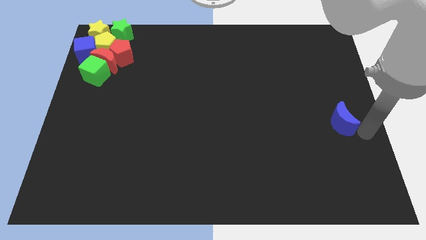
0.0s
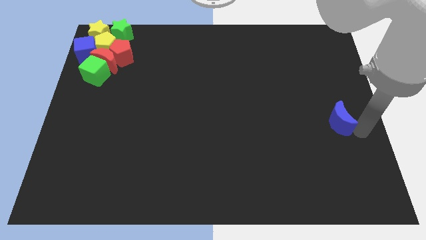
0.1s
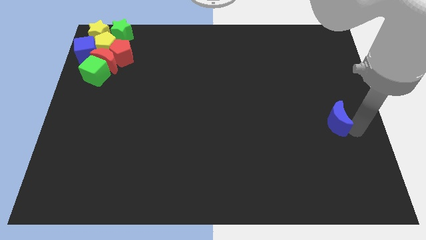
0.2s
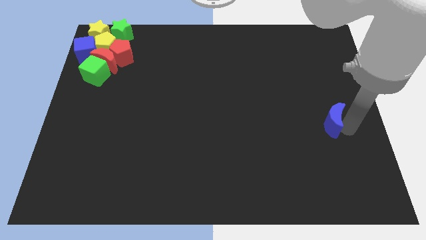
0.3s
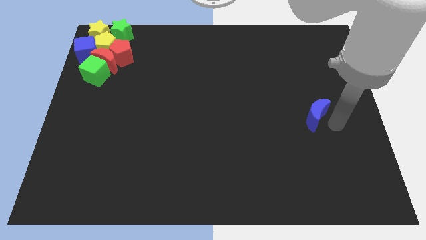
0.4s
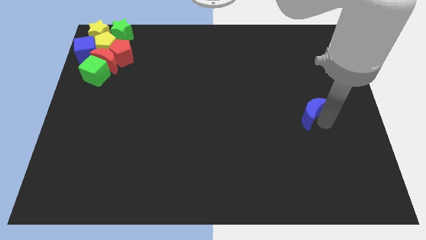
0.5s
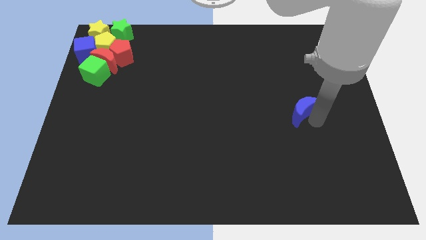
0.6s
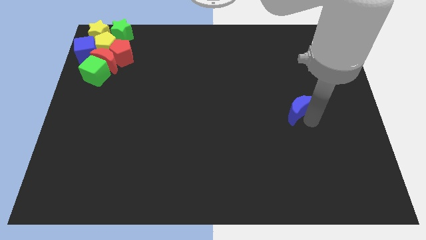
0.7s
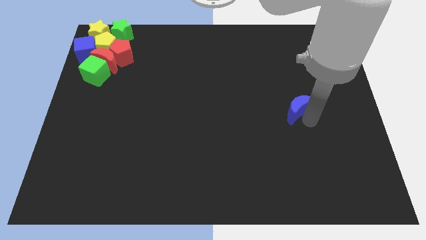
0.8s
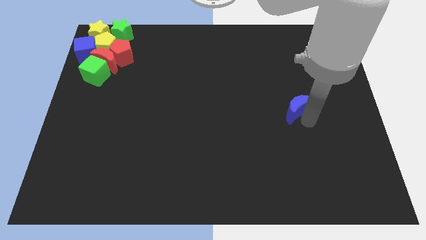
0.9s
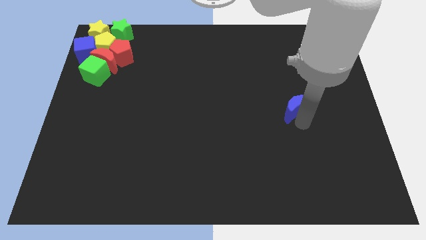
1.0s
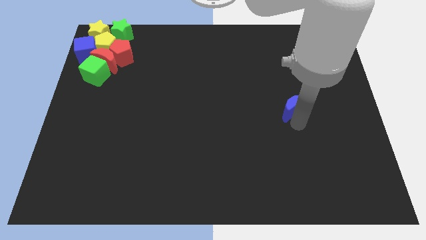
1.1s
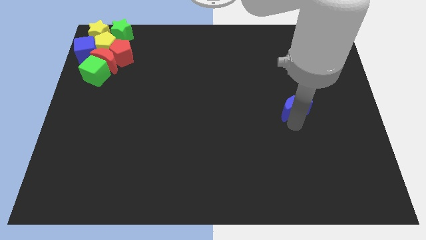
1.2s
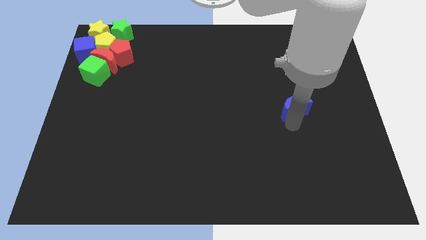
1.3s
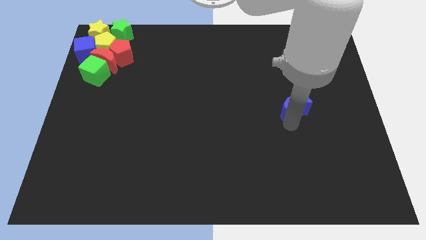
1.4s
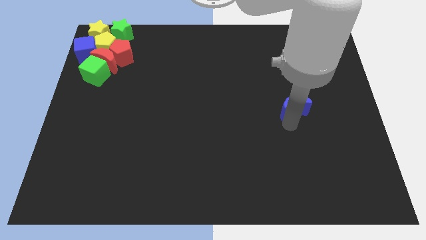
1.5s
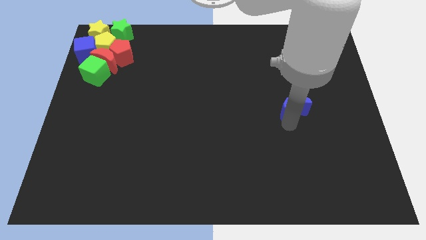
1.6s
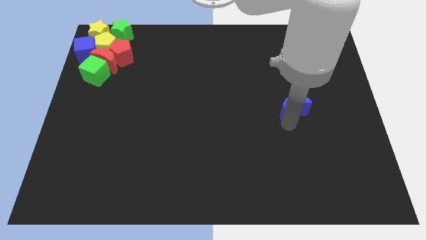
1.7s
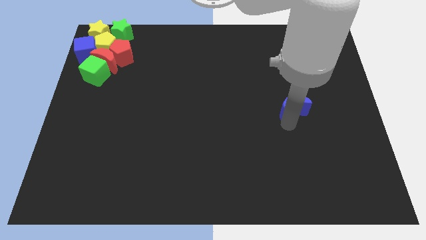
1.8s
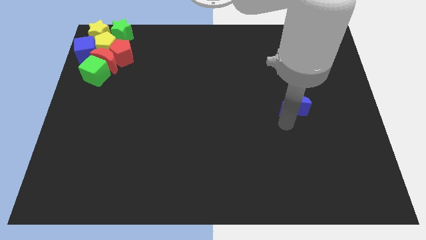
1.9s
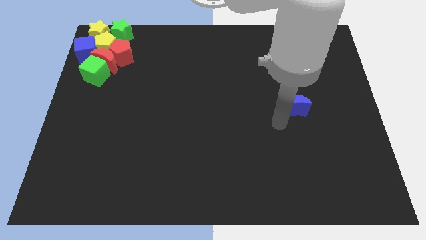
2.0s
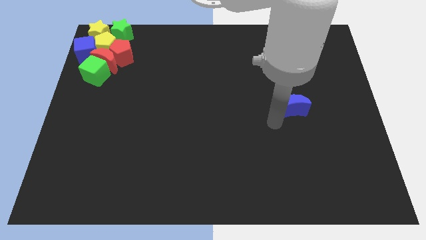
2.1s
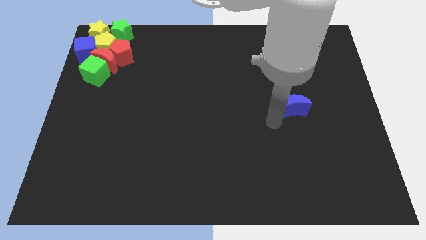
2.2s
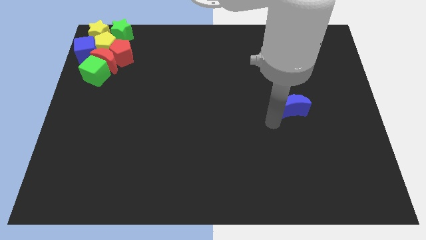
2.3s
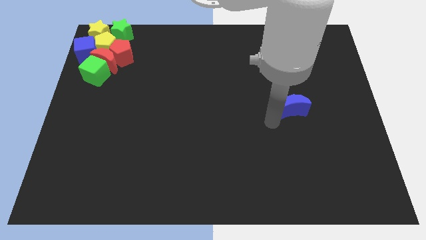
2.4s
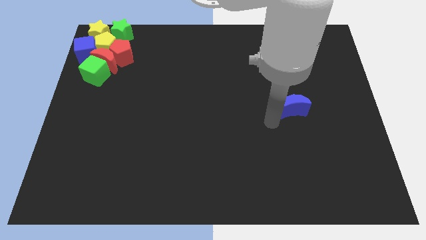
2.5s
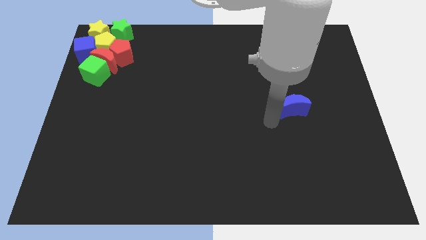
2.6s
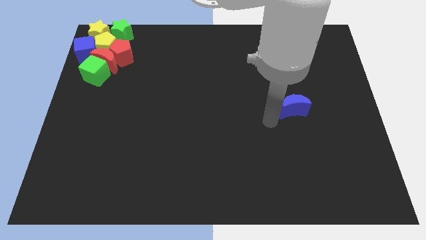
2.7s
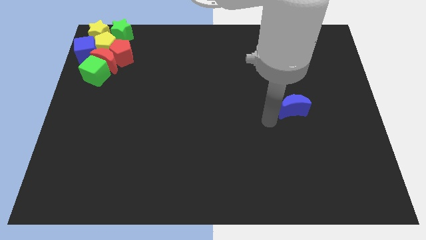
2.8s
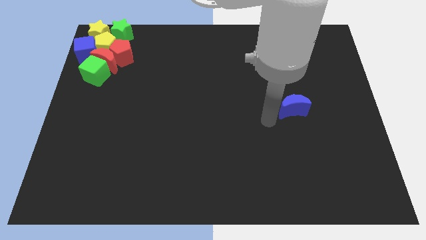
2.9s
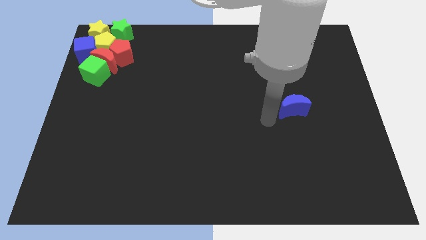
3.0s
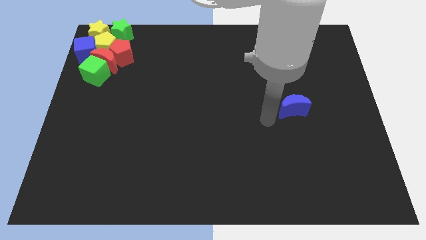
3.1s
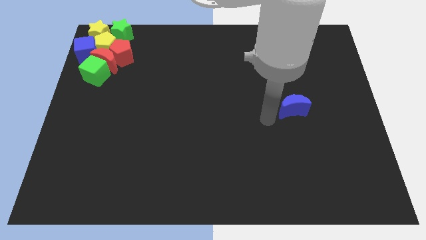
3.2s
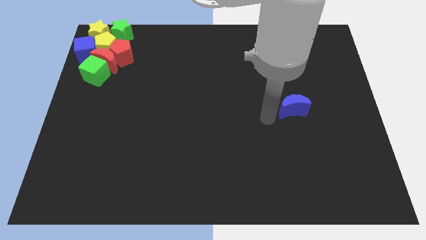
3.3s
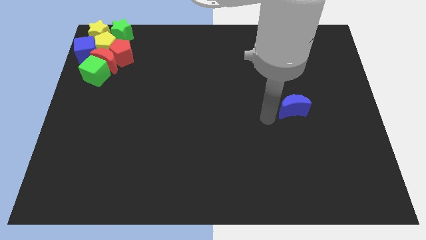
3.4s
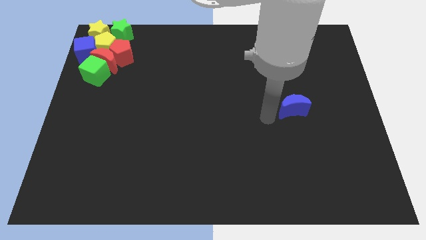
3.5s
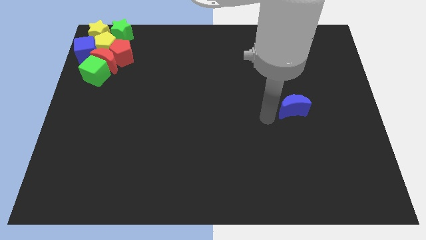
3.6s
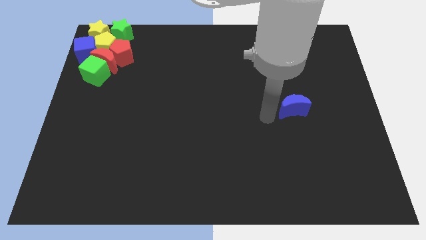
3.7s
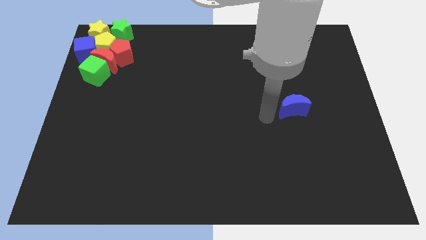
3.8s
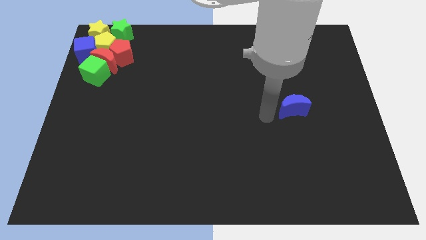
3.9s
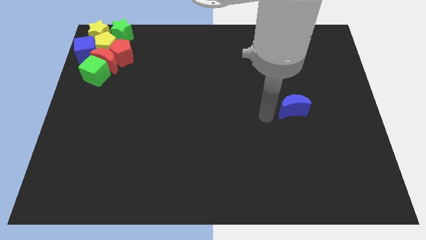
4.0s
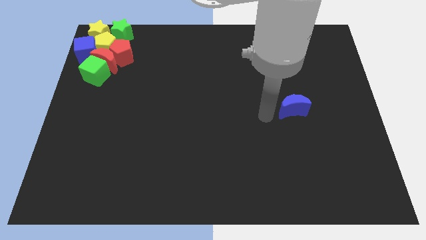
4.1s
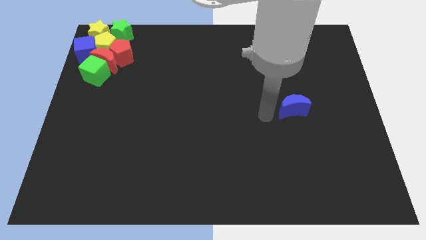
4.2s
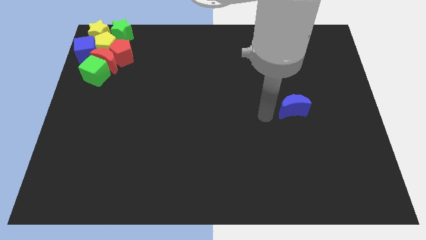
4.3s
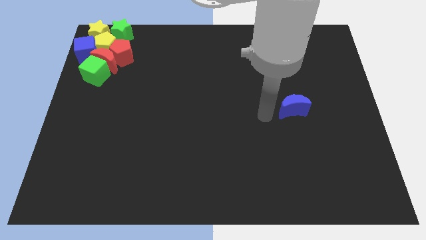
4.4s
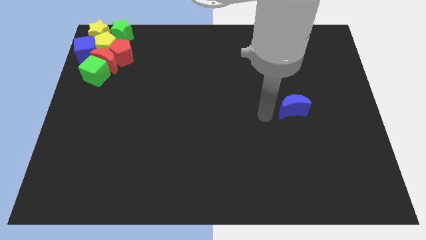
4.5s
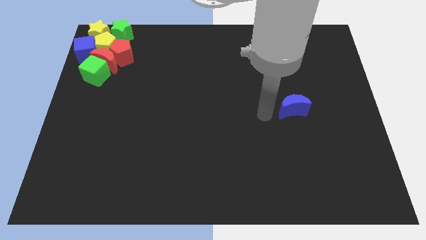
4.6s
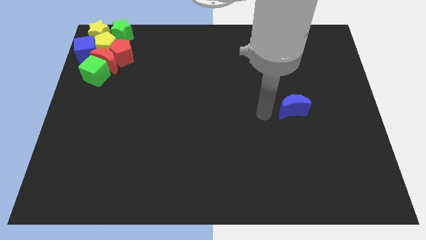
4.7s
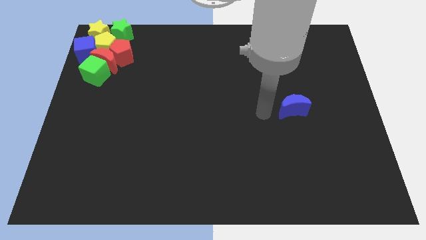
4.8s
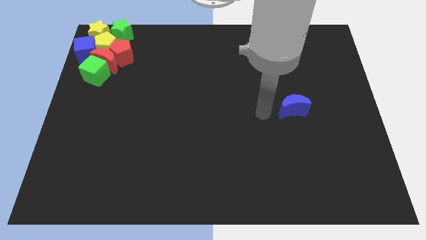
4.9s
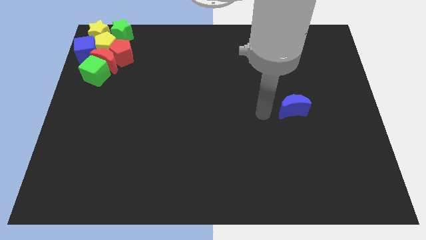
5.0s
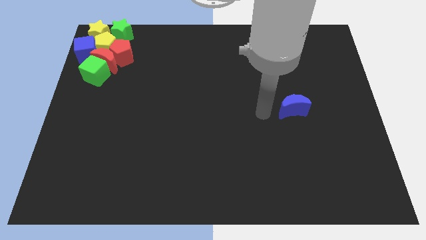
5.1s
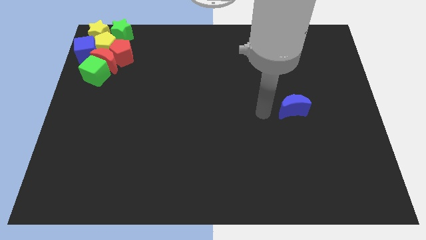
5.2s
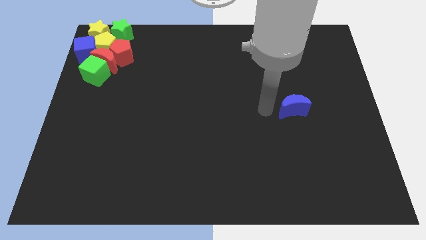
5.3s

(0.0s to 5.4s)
slightly push the blue moon to the right

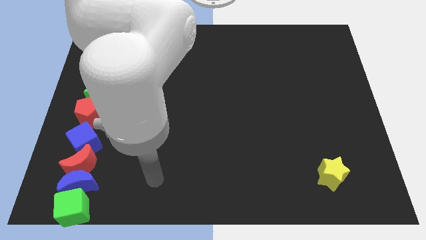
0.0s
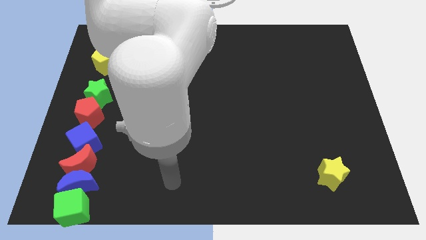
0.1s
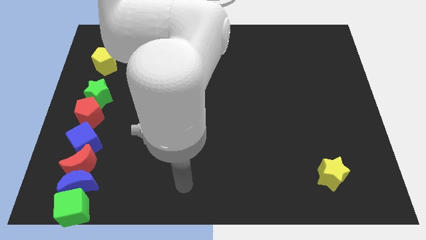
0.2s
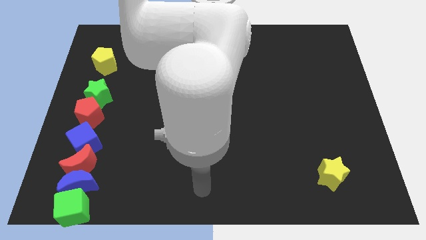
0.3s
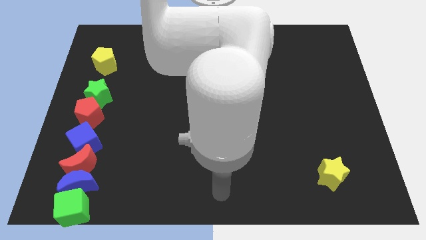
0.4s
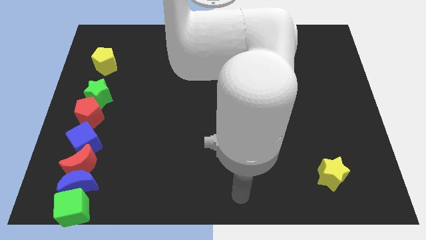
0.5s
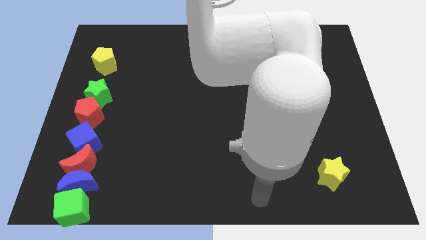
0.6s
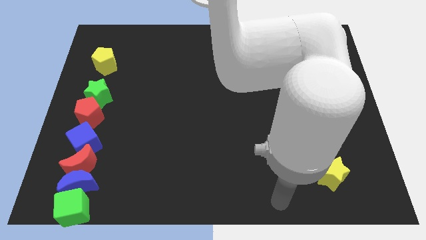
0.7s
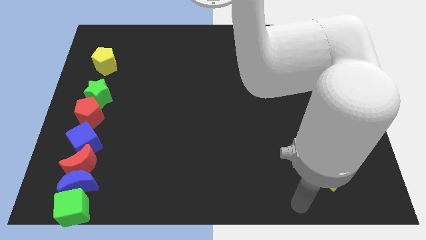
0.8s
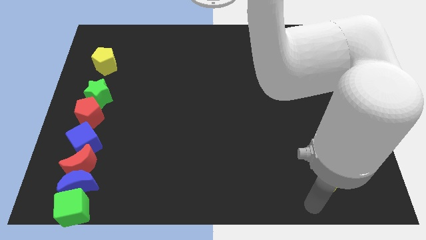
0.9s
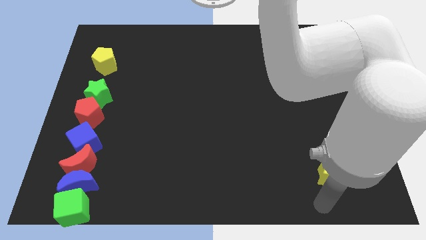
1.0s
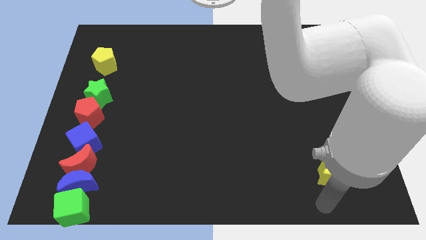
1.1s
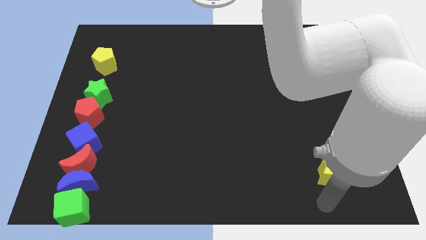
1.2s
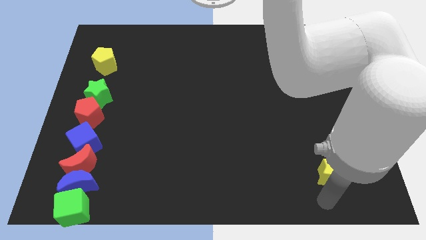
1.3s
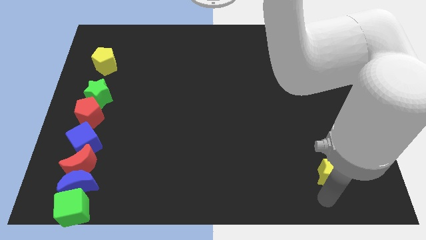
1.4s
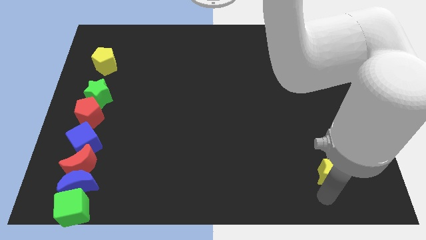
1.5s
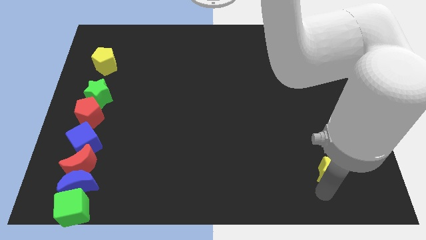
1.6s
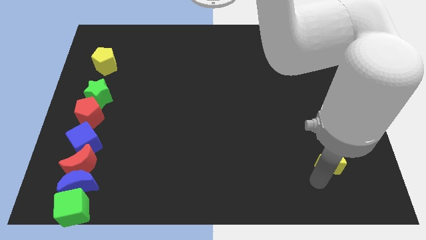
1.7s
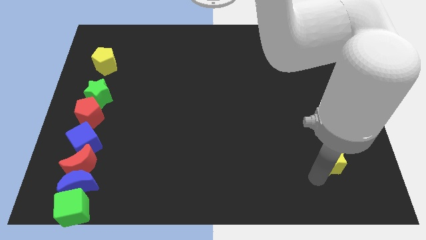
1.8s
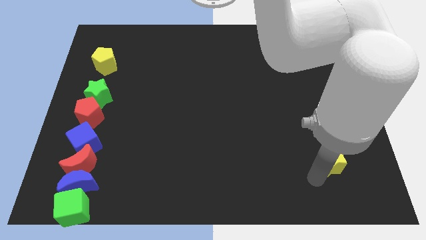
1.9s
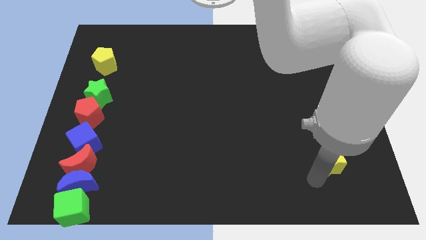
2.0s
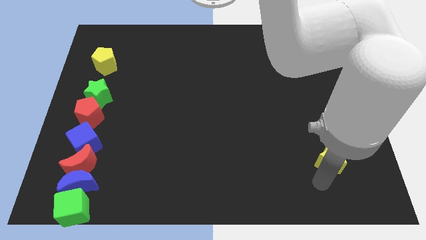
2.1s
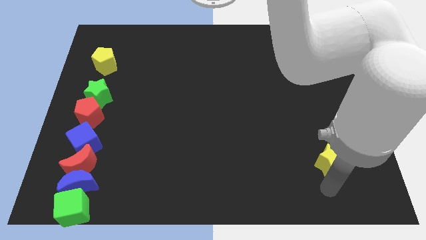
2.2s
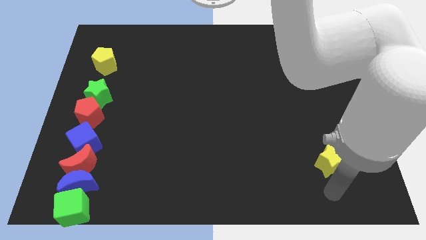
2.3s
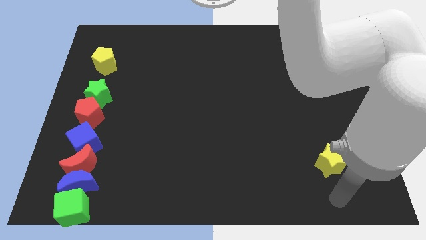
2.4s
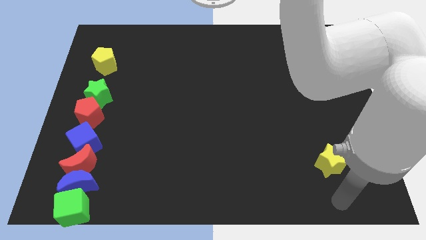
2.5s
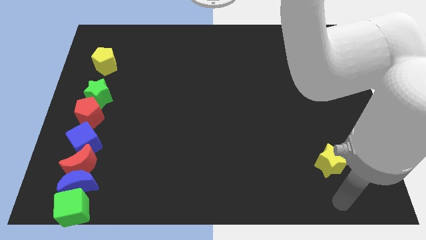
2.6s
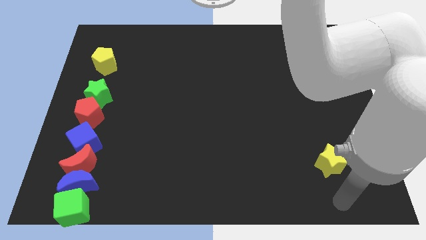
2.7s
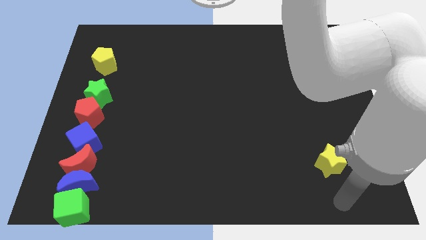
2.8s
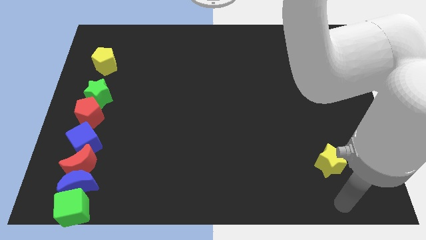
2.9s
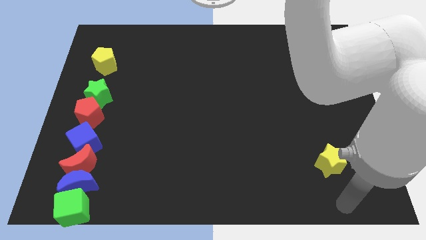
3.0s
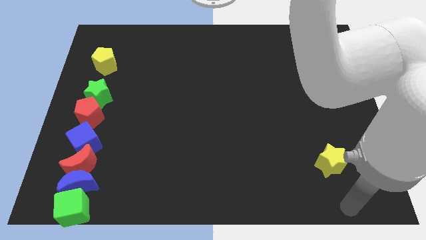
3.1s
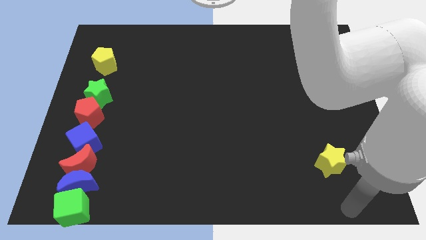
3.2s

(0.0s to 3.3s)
slightly move the yellow star

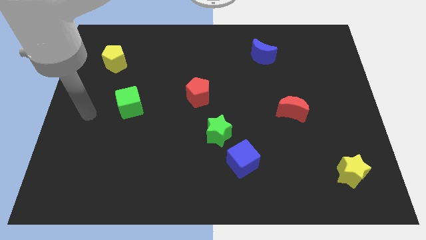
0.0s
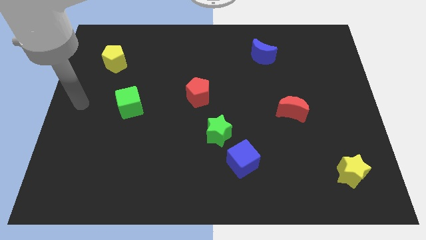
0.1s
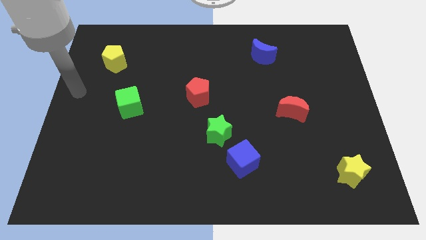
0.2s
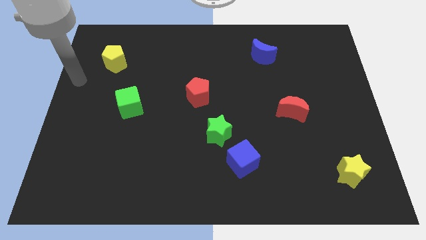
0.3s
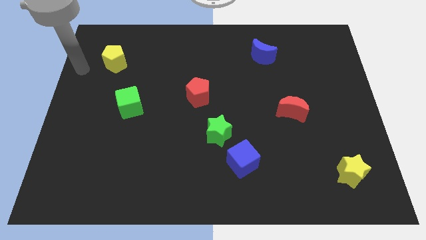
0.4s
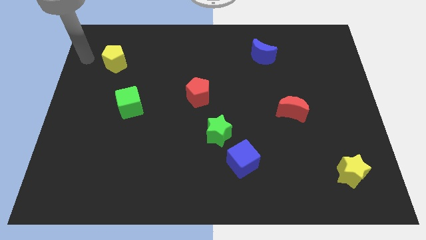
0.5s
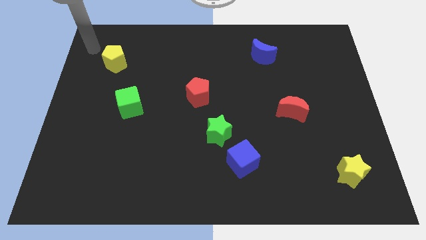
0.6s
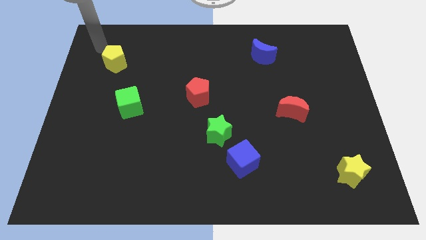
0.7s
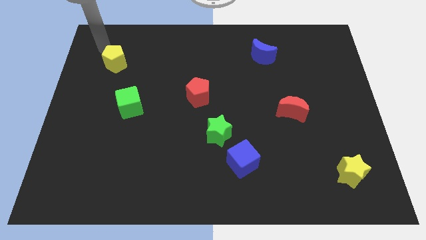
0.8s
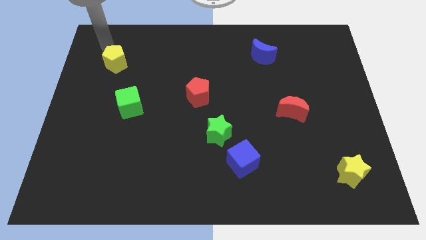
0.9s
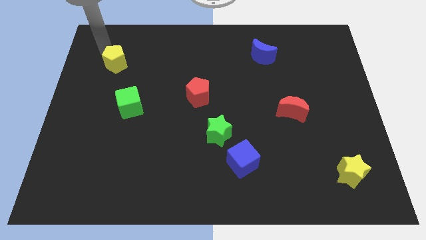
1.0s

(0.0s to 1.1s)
touch the top left of the yellow pentagon
